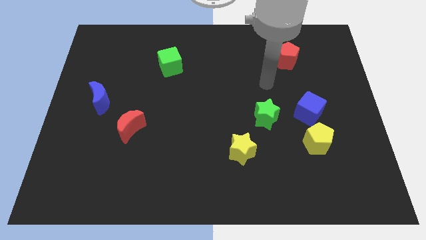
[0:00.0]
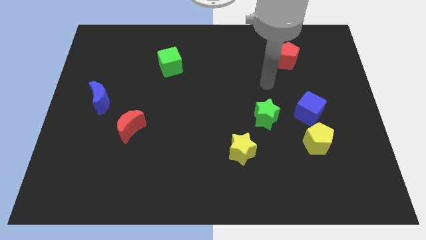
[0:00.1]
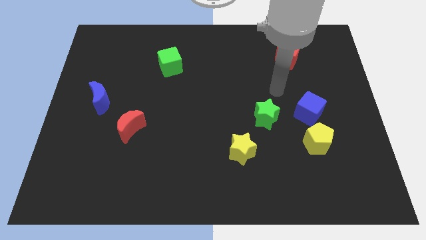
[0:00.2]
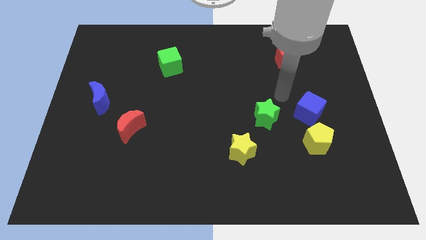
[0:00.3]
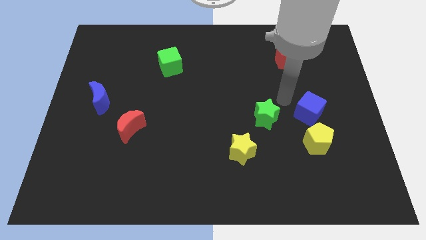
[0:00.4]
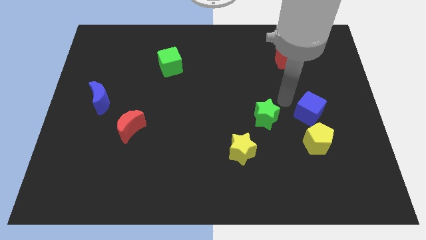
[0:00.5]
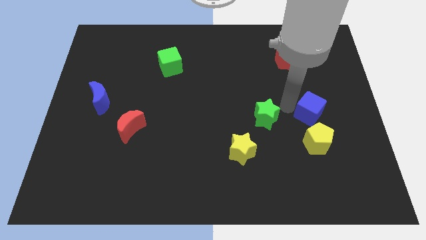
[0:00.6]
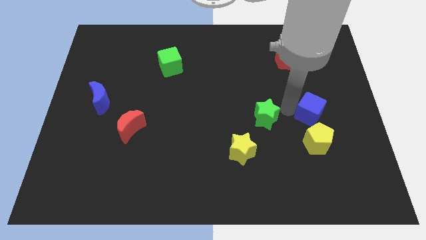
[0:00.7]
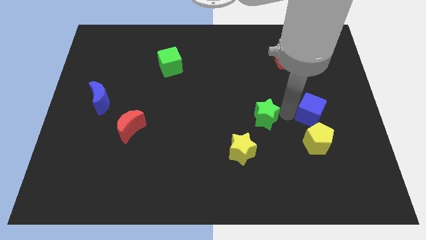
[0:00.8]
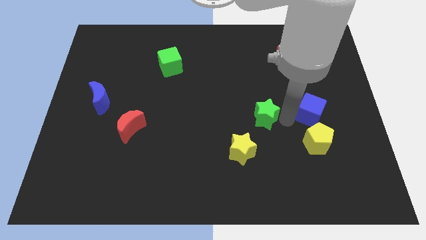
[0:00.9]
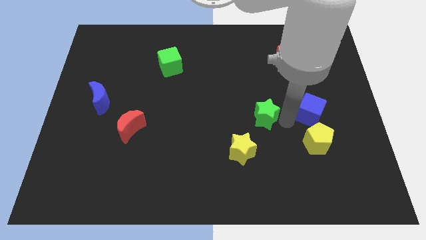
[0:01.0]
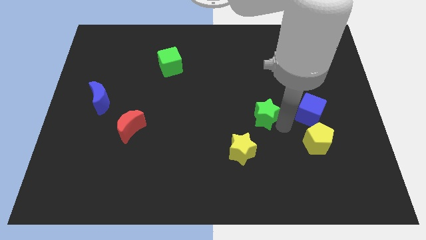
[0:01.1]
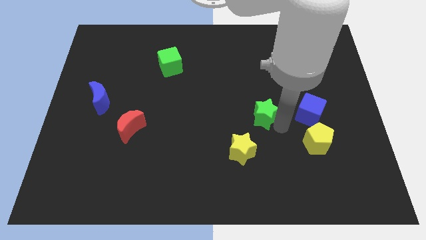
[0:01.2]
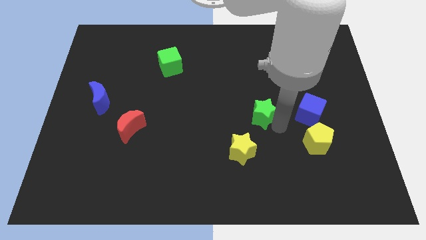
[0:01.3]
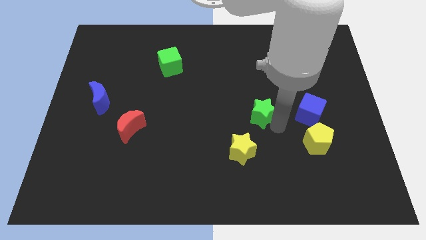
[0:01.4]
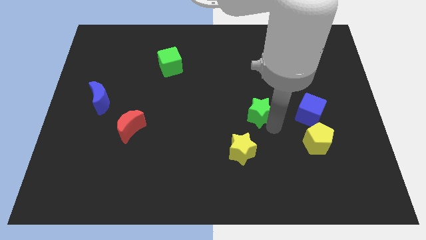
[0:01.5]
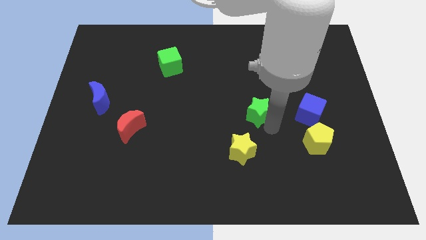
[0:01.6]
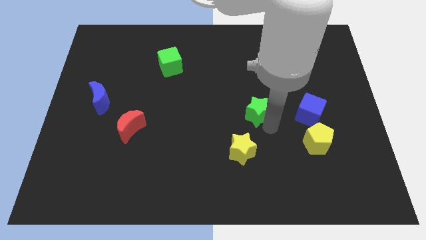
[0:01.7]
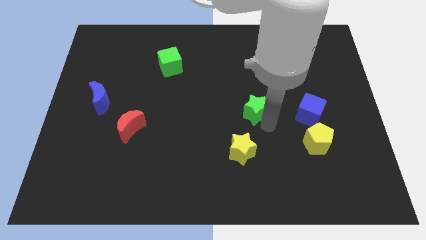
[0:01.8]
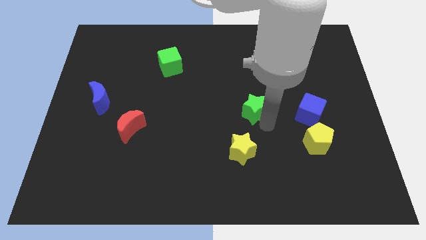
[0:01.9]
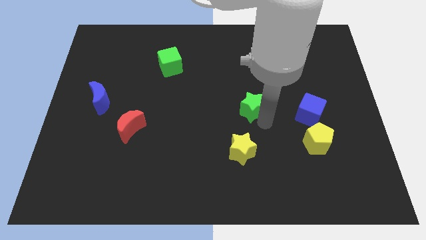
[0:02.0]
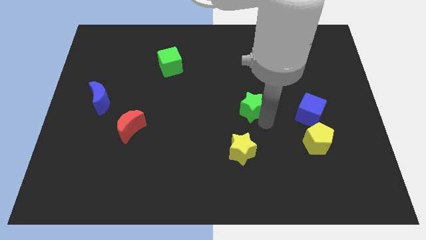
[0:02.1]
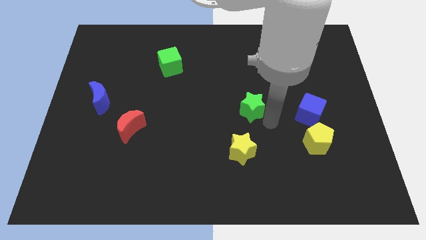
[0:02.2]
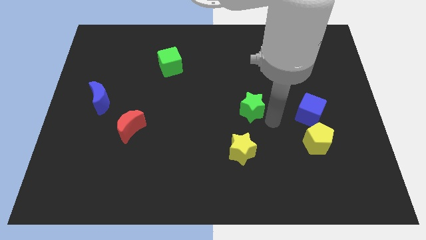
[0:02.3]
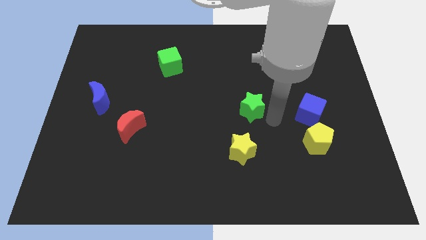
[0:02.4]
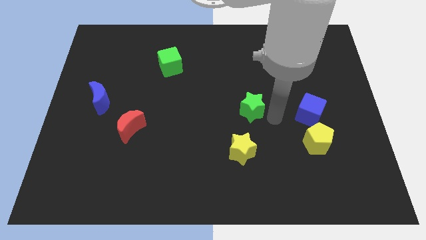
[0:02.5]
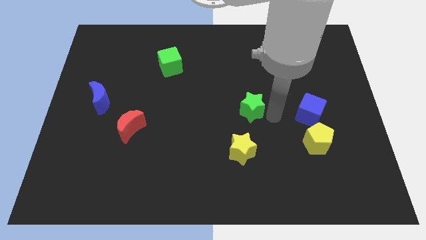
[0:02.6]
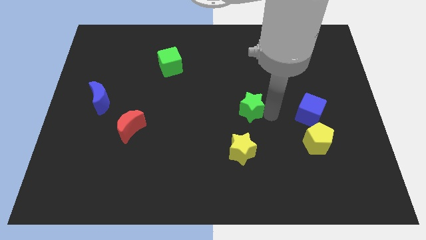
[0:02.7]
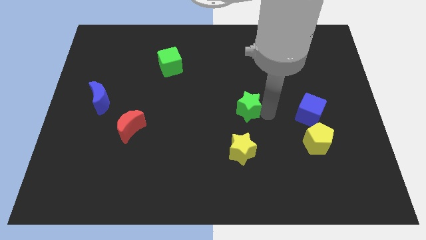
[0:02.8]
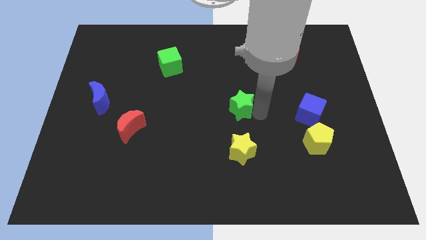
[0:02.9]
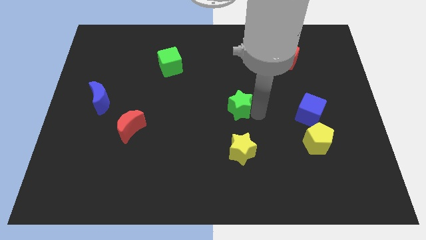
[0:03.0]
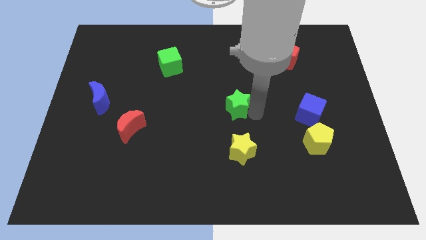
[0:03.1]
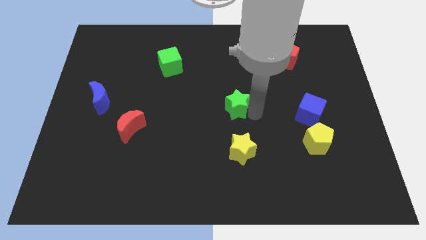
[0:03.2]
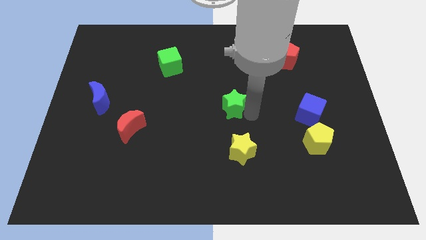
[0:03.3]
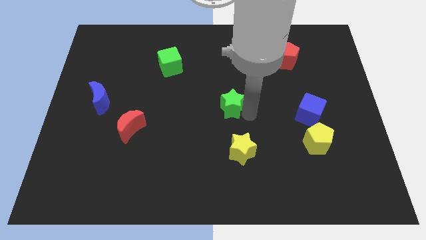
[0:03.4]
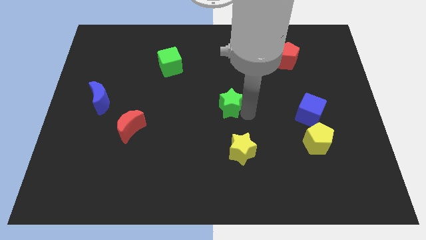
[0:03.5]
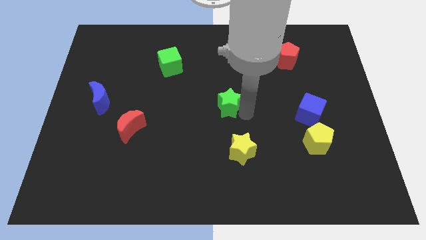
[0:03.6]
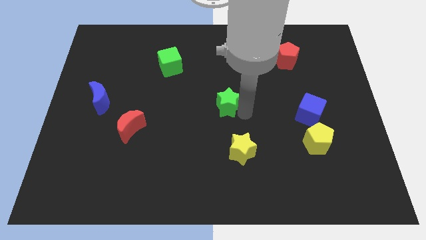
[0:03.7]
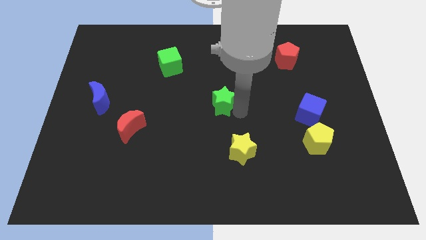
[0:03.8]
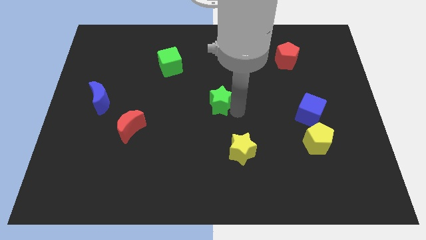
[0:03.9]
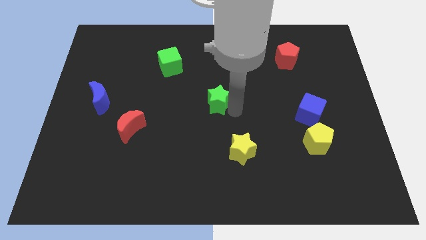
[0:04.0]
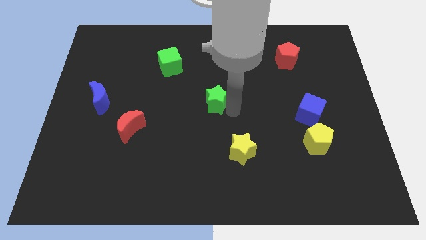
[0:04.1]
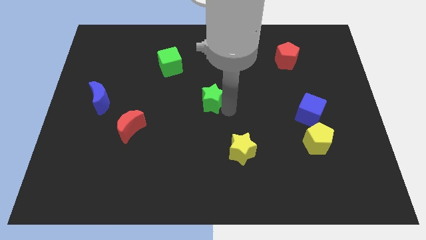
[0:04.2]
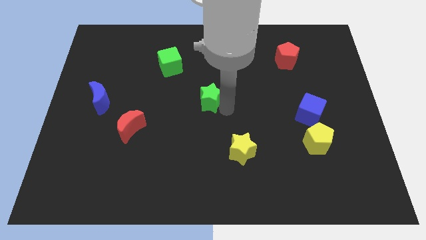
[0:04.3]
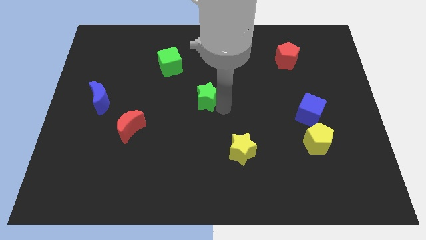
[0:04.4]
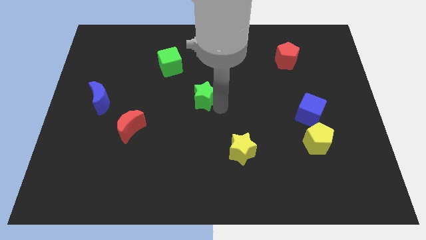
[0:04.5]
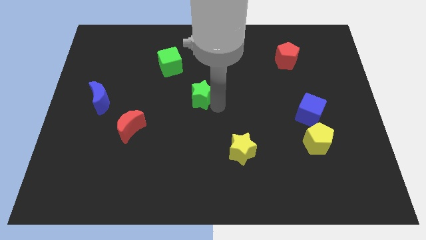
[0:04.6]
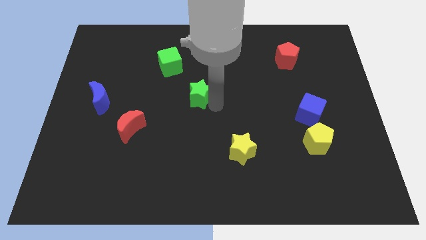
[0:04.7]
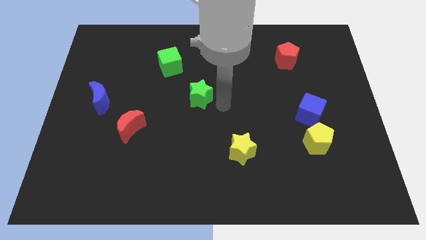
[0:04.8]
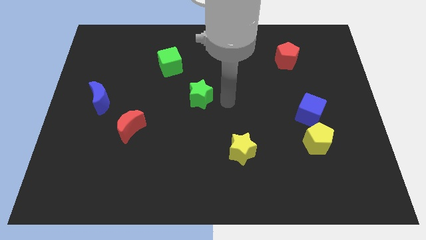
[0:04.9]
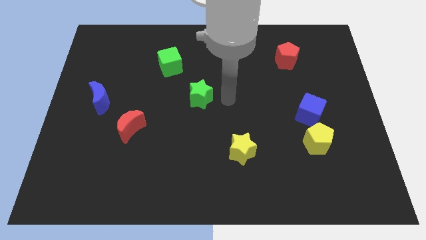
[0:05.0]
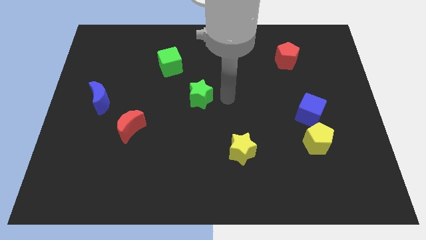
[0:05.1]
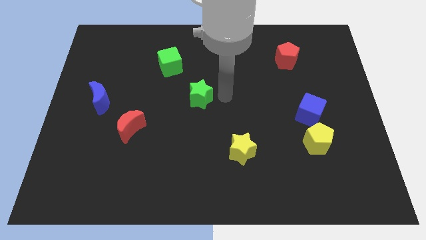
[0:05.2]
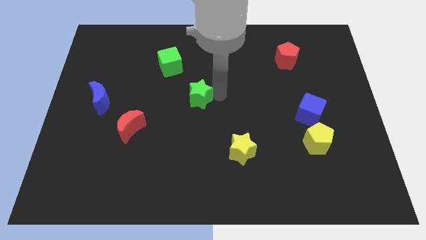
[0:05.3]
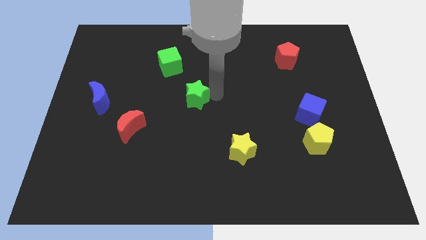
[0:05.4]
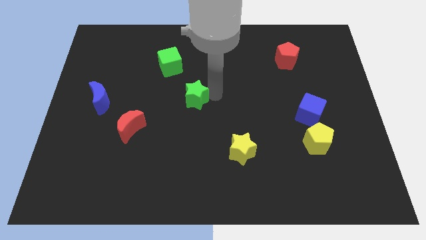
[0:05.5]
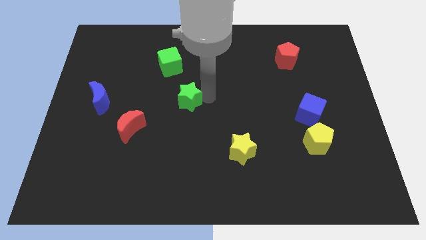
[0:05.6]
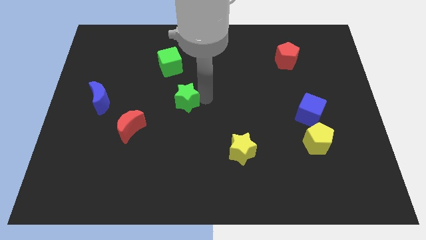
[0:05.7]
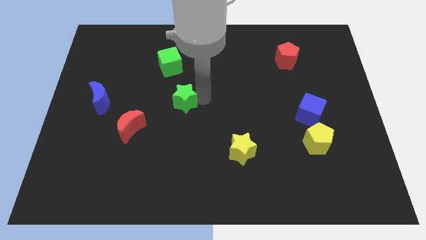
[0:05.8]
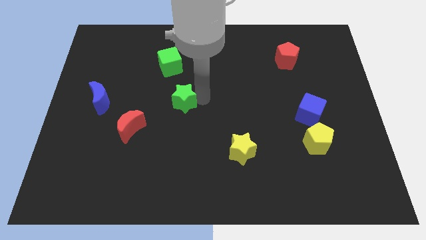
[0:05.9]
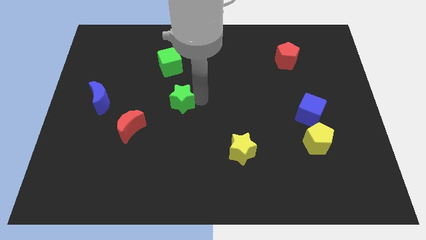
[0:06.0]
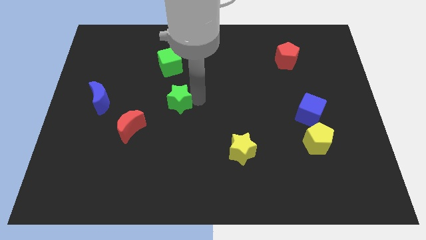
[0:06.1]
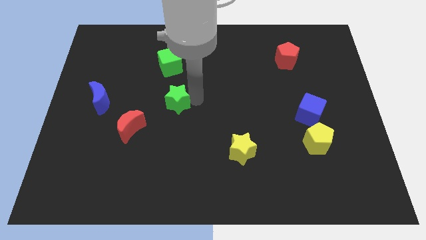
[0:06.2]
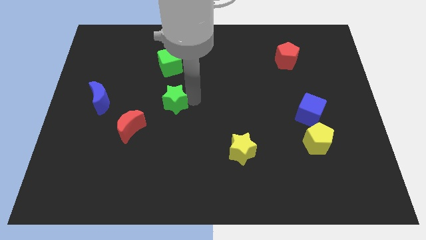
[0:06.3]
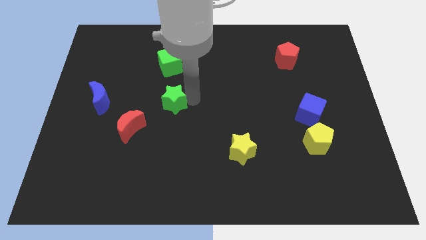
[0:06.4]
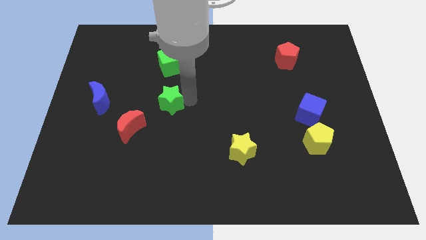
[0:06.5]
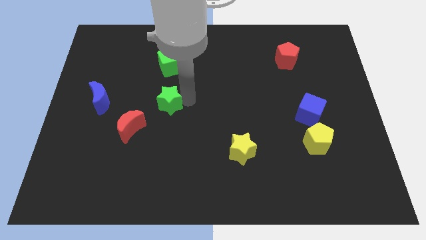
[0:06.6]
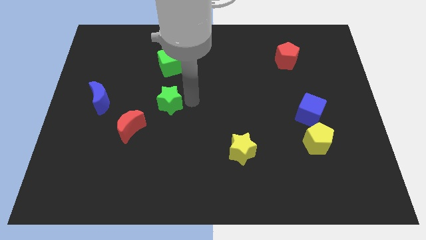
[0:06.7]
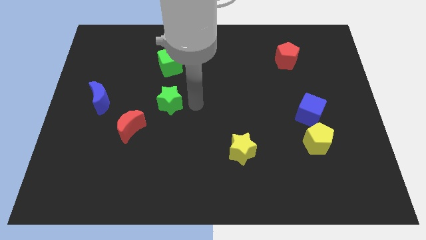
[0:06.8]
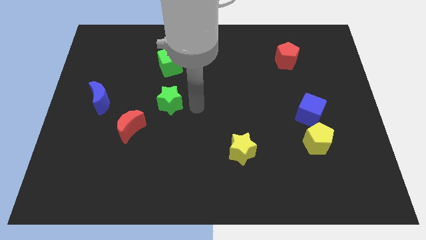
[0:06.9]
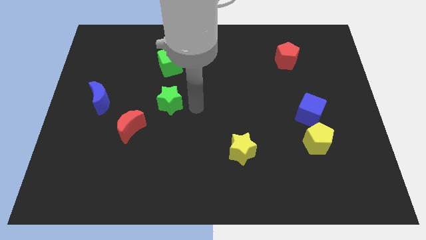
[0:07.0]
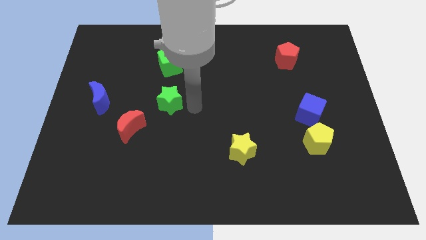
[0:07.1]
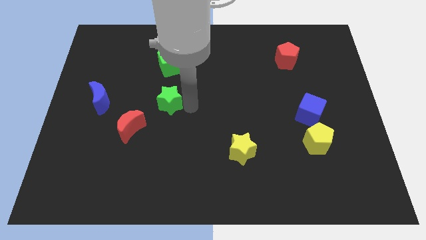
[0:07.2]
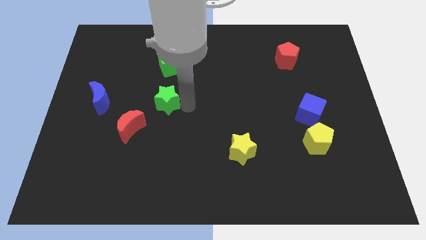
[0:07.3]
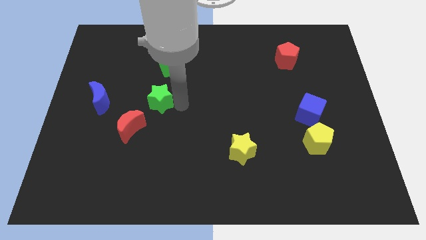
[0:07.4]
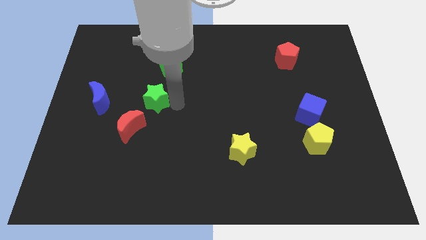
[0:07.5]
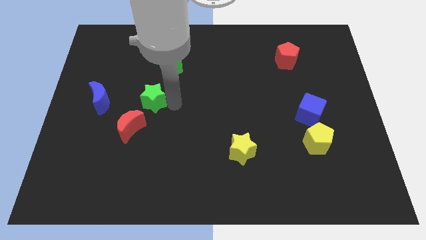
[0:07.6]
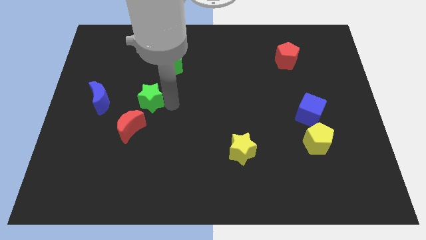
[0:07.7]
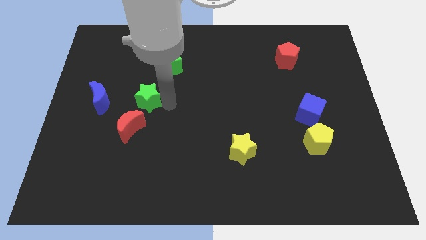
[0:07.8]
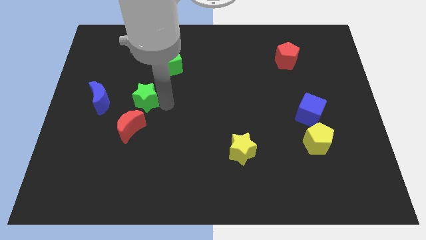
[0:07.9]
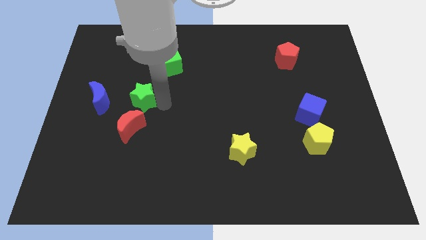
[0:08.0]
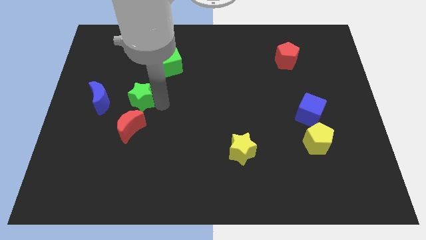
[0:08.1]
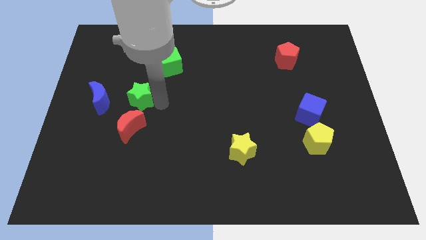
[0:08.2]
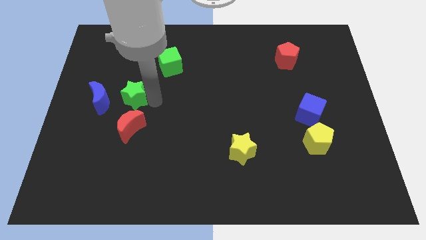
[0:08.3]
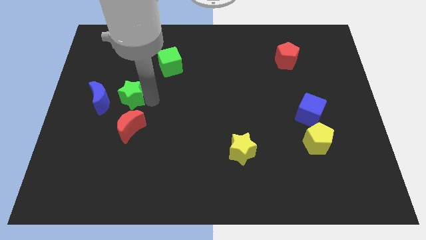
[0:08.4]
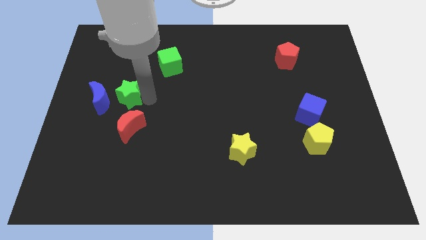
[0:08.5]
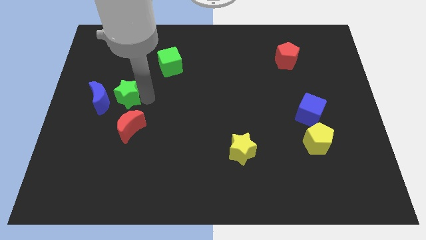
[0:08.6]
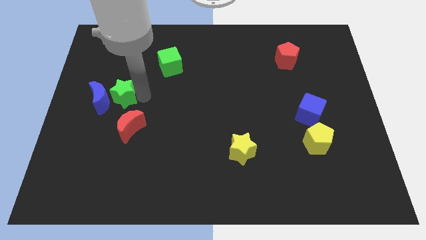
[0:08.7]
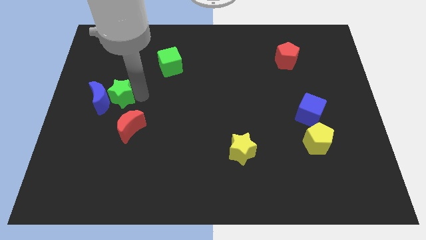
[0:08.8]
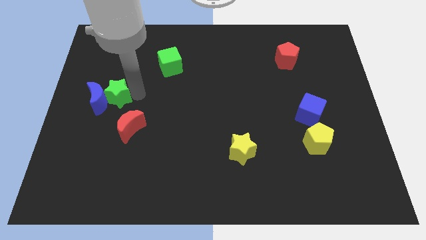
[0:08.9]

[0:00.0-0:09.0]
push the green star close to the blue moon
